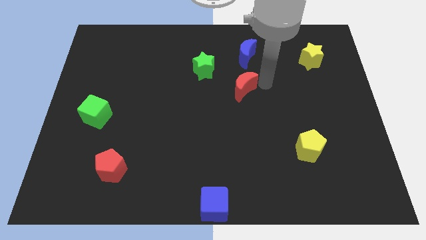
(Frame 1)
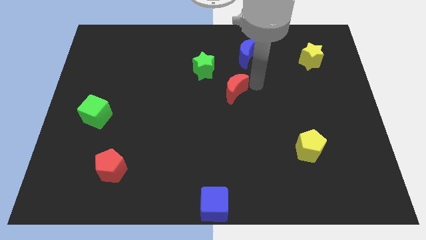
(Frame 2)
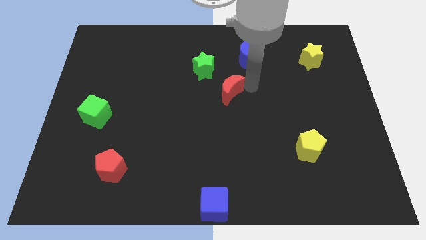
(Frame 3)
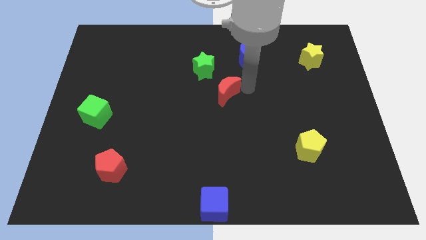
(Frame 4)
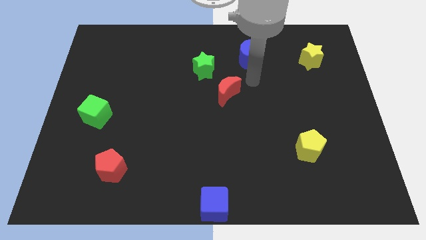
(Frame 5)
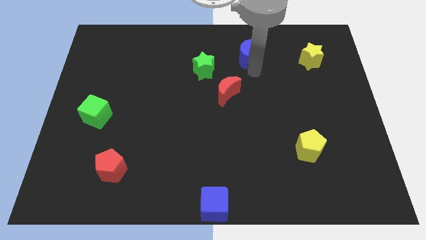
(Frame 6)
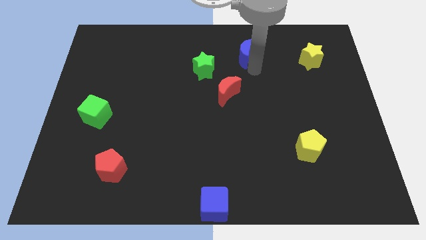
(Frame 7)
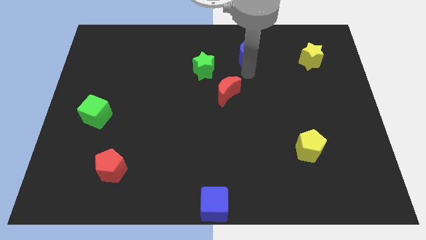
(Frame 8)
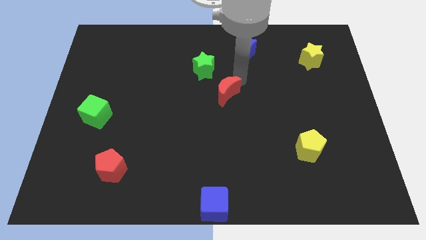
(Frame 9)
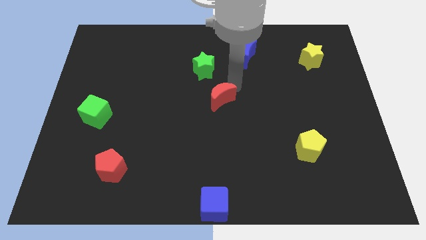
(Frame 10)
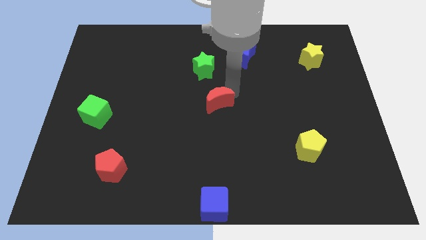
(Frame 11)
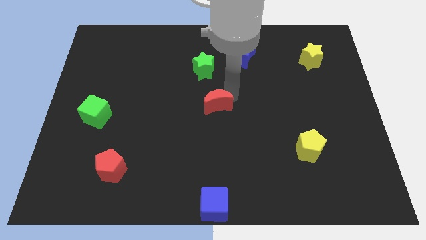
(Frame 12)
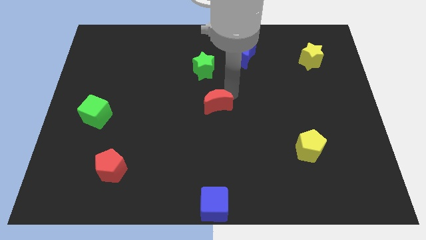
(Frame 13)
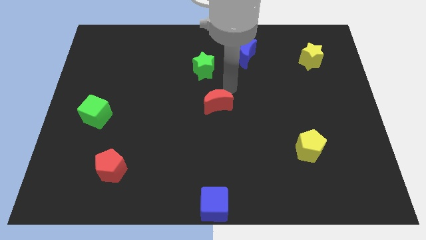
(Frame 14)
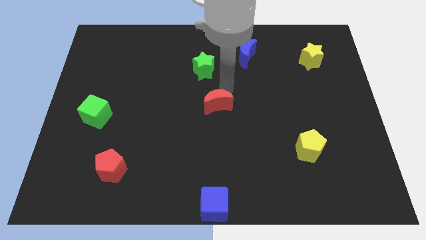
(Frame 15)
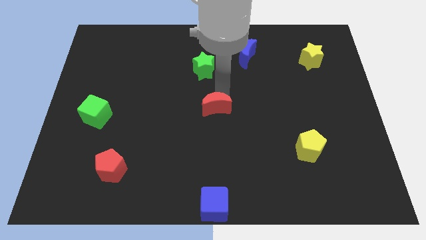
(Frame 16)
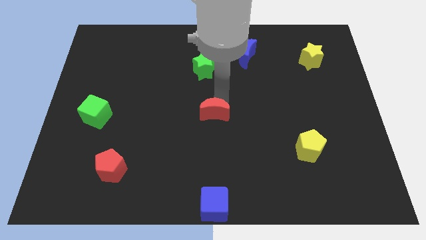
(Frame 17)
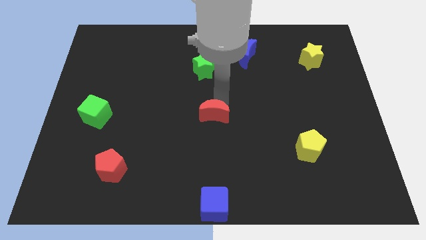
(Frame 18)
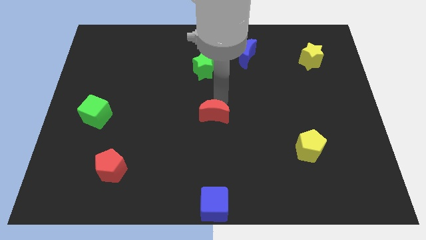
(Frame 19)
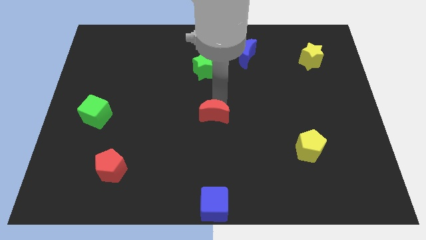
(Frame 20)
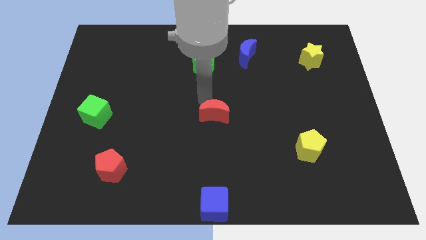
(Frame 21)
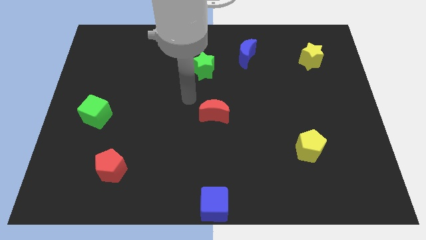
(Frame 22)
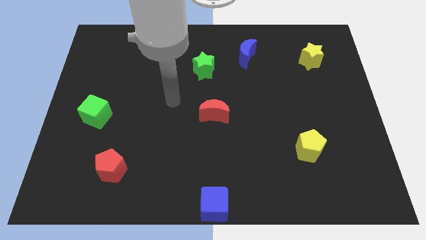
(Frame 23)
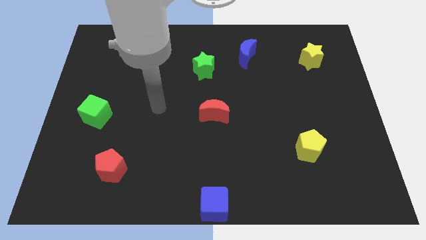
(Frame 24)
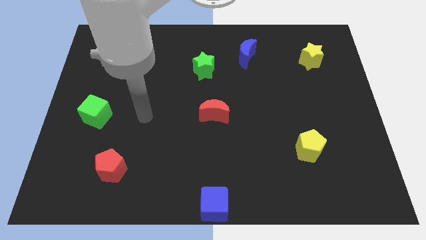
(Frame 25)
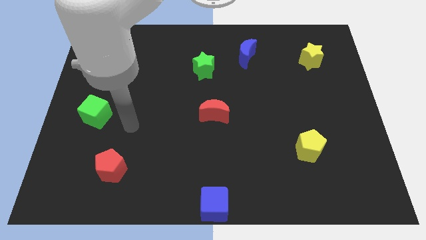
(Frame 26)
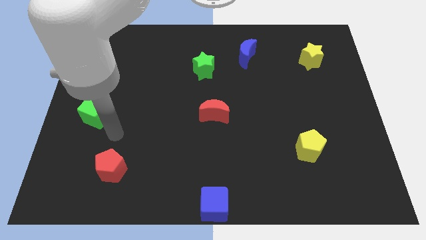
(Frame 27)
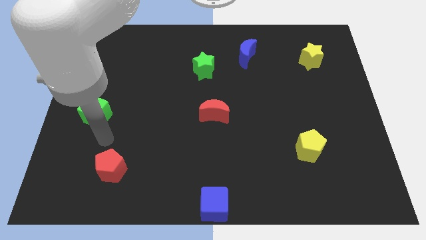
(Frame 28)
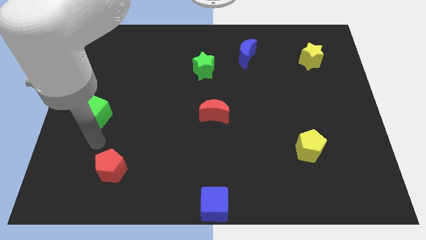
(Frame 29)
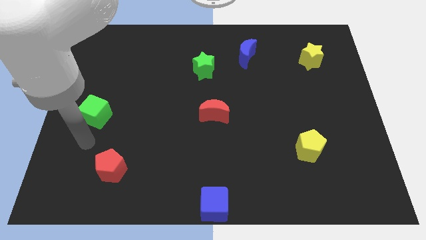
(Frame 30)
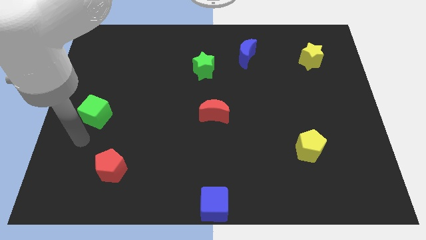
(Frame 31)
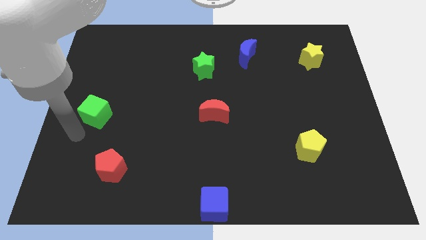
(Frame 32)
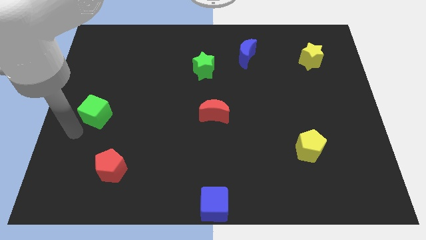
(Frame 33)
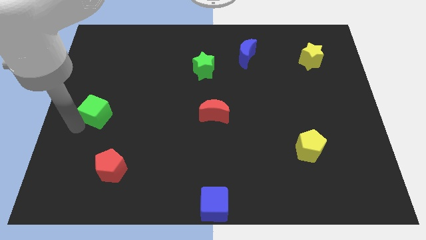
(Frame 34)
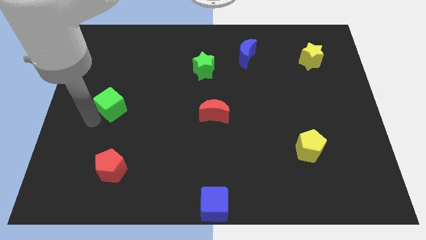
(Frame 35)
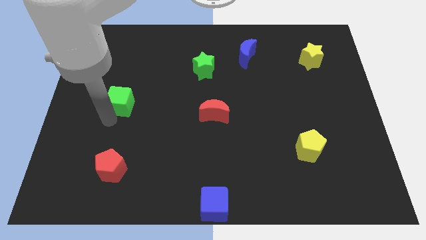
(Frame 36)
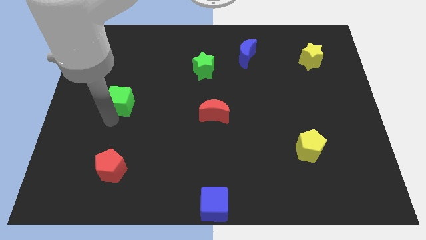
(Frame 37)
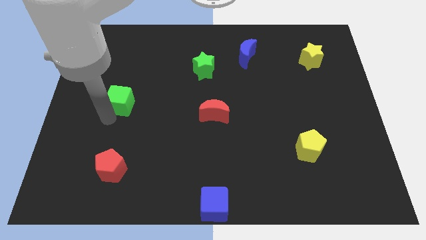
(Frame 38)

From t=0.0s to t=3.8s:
push the red crescent slightly down

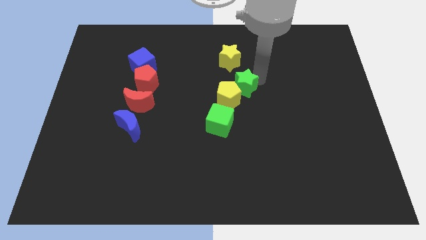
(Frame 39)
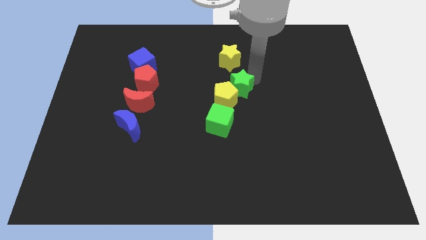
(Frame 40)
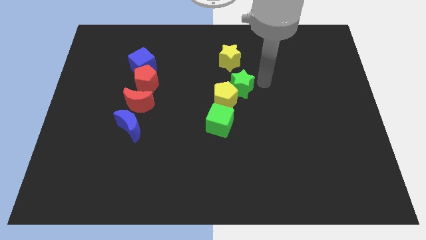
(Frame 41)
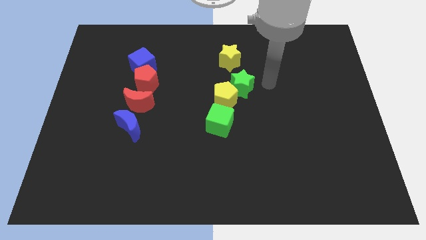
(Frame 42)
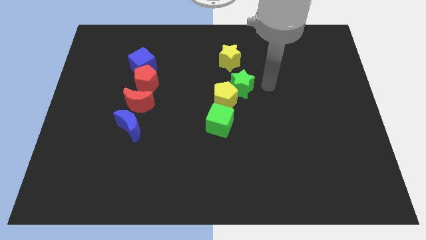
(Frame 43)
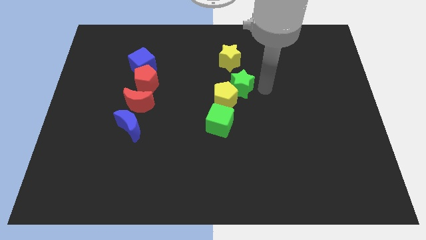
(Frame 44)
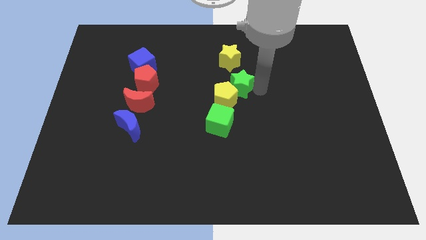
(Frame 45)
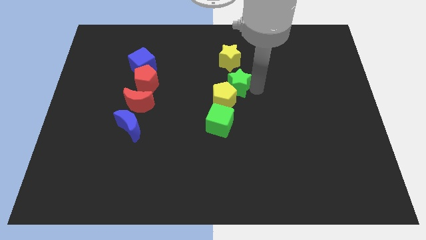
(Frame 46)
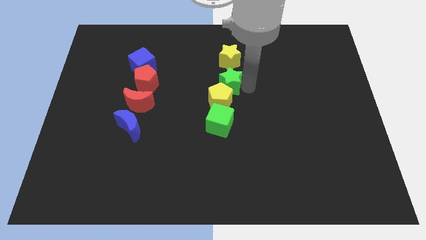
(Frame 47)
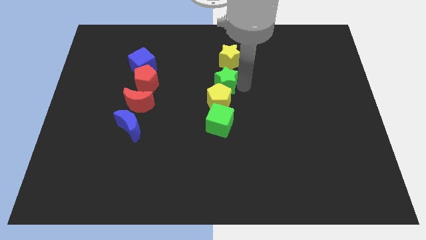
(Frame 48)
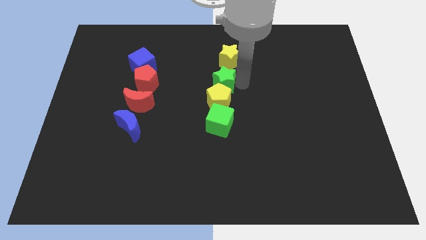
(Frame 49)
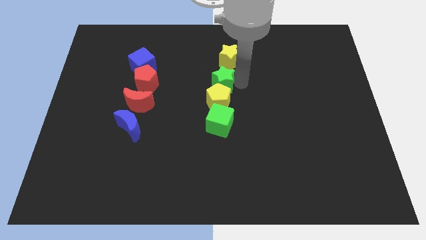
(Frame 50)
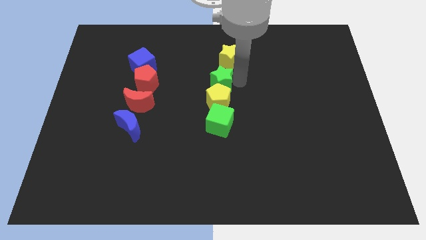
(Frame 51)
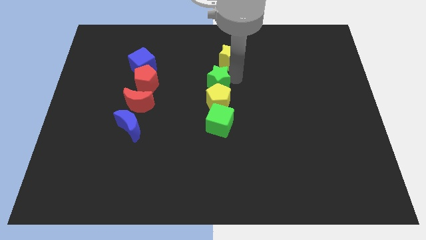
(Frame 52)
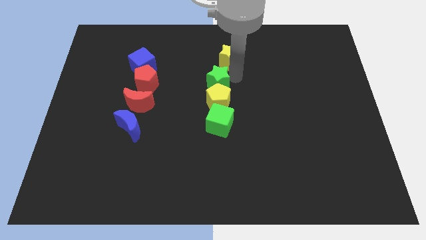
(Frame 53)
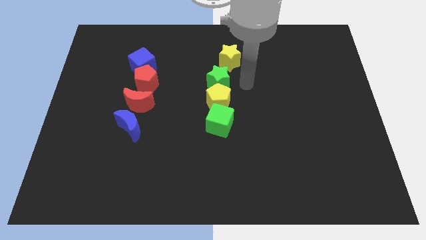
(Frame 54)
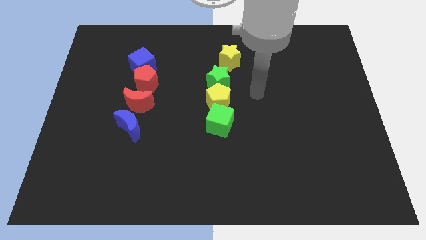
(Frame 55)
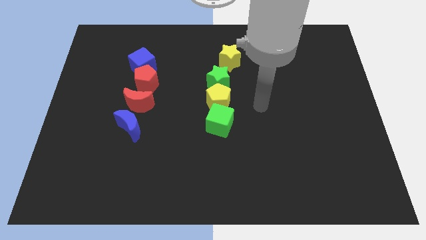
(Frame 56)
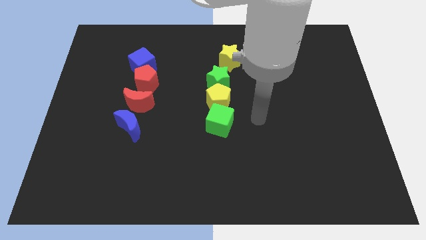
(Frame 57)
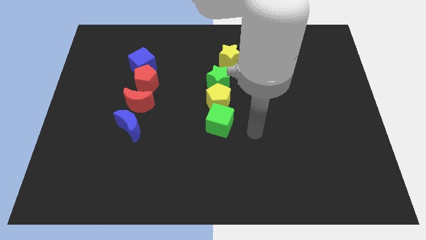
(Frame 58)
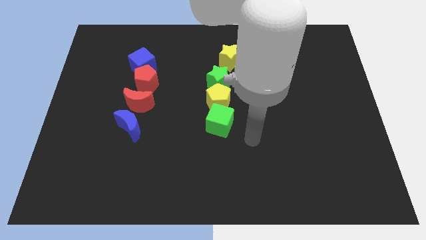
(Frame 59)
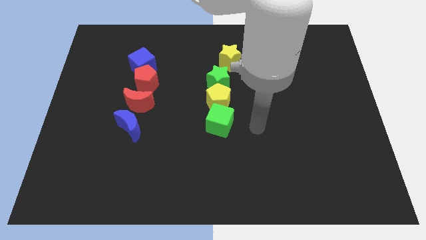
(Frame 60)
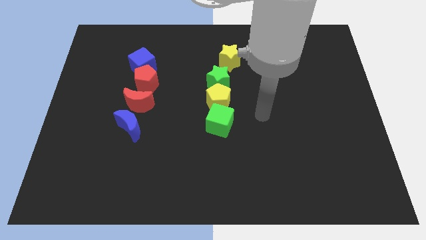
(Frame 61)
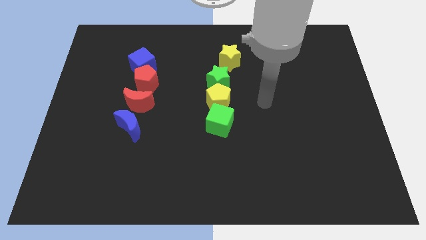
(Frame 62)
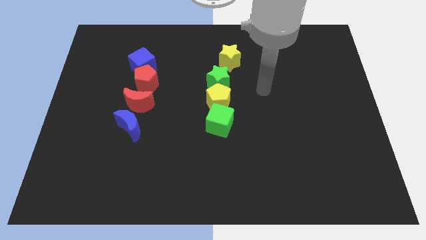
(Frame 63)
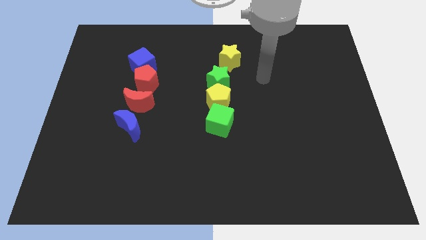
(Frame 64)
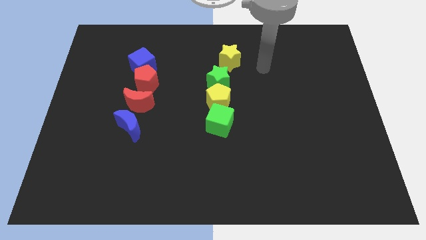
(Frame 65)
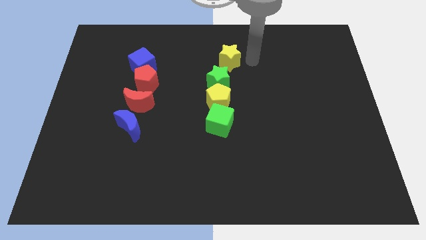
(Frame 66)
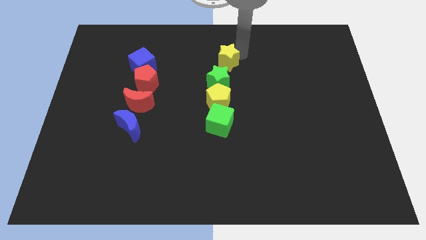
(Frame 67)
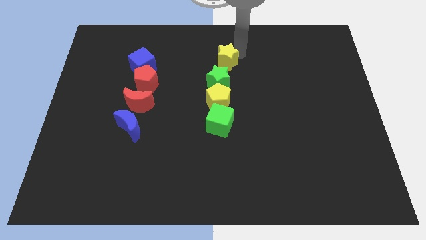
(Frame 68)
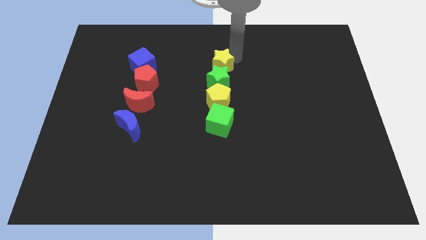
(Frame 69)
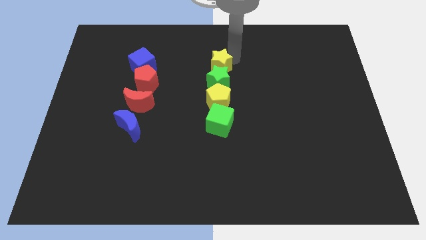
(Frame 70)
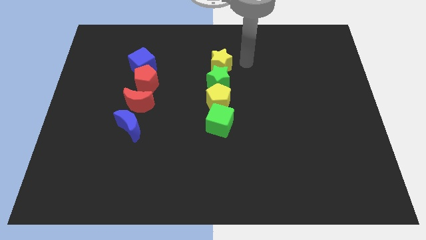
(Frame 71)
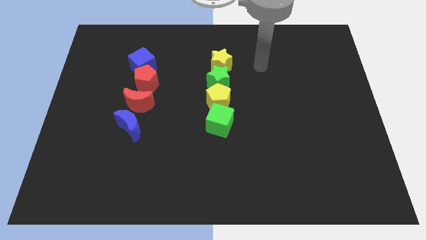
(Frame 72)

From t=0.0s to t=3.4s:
place green star below yellow star to form vertical line

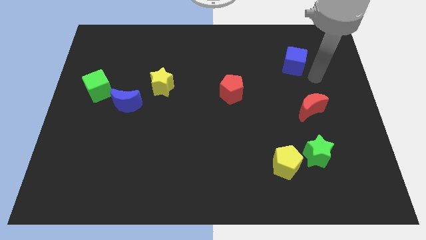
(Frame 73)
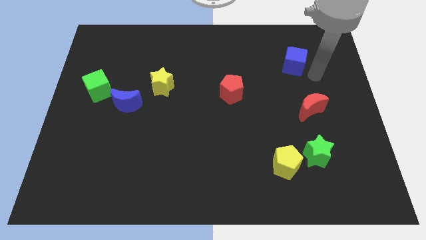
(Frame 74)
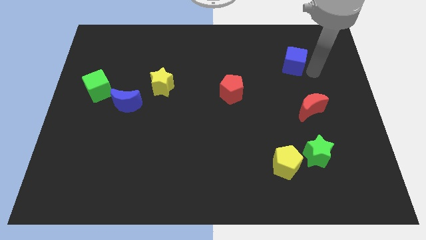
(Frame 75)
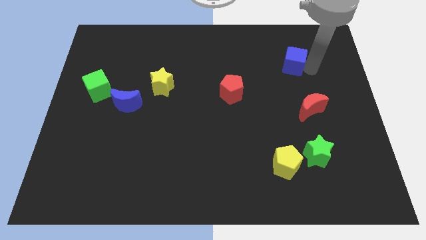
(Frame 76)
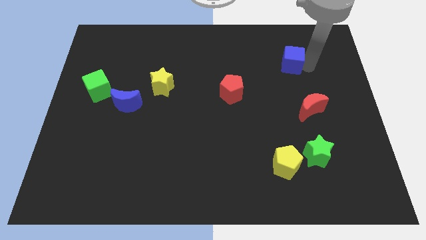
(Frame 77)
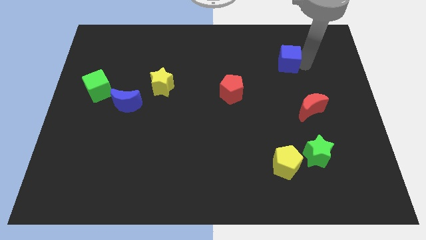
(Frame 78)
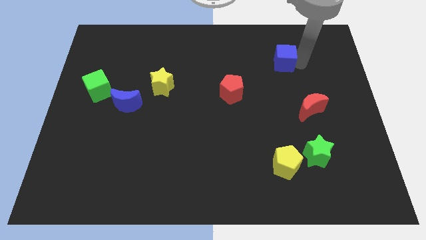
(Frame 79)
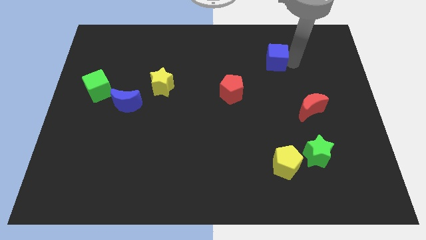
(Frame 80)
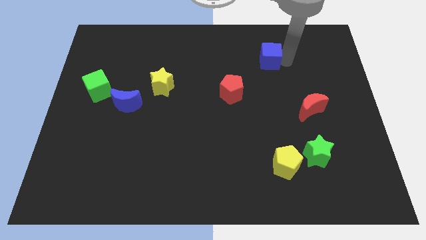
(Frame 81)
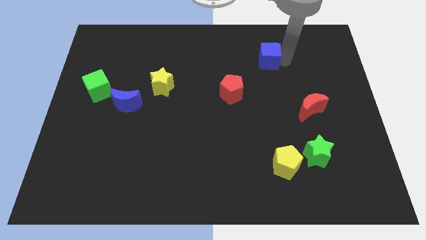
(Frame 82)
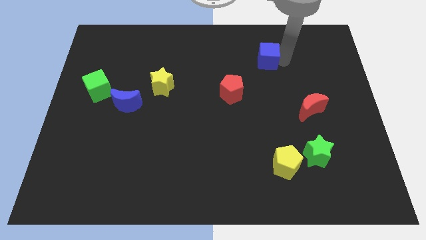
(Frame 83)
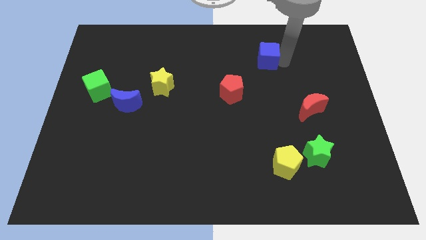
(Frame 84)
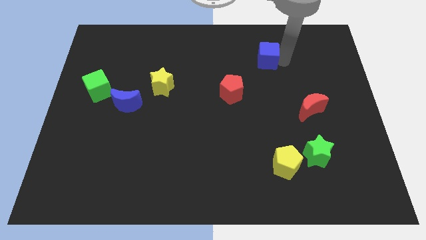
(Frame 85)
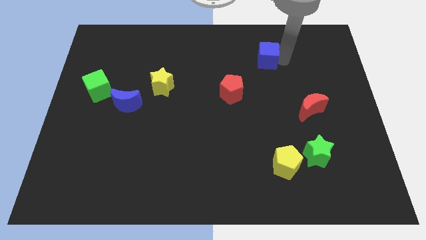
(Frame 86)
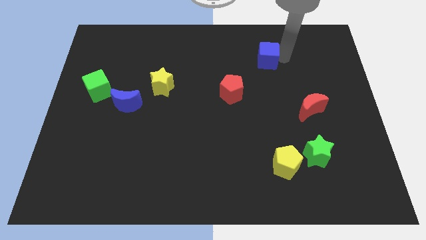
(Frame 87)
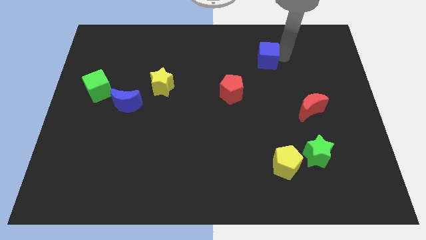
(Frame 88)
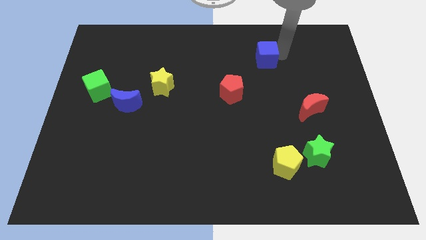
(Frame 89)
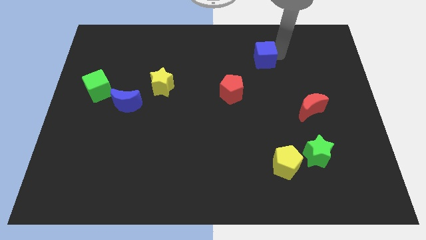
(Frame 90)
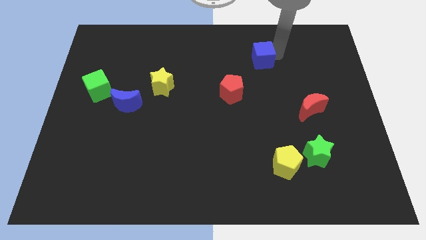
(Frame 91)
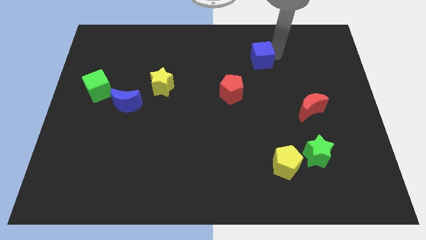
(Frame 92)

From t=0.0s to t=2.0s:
push blue cube to its left
